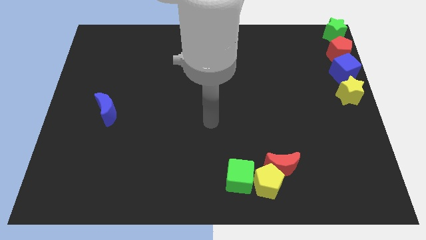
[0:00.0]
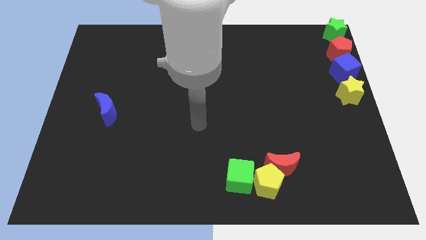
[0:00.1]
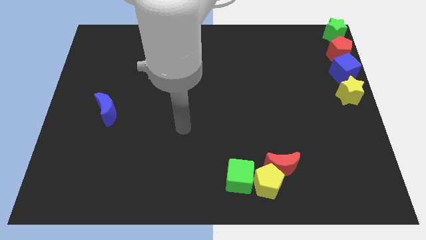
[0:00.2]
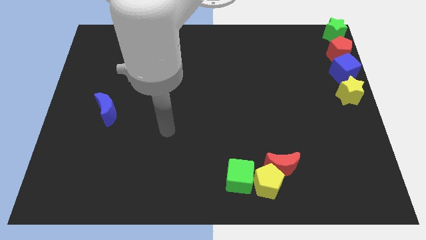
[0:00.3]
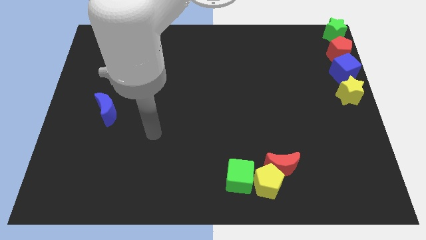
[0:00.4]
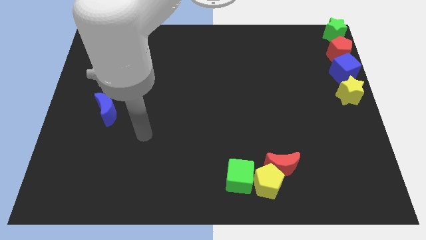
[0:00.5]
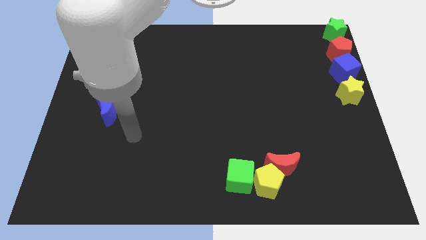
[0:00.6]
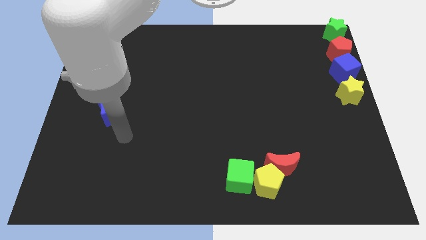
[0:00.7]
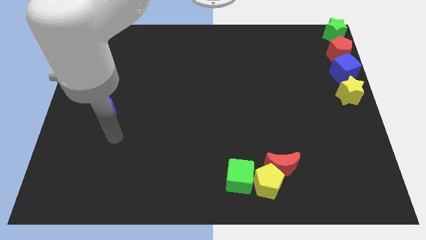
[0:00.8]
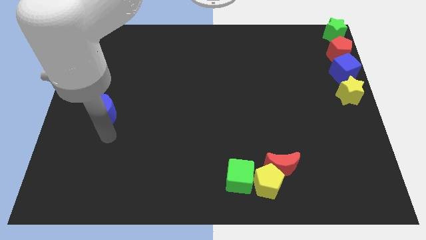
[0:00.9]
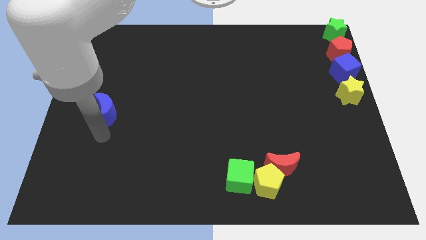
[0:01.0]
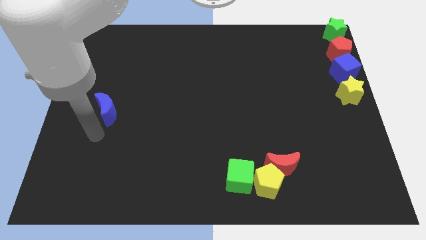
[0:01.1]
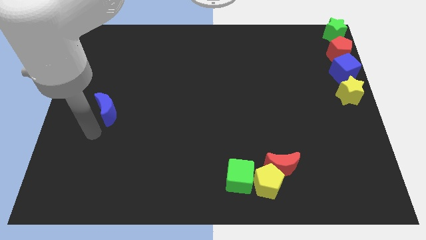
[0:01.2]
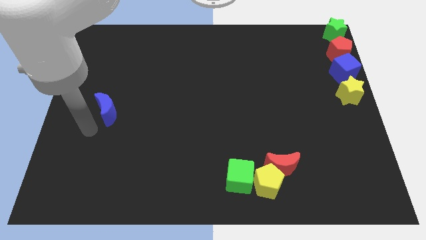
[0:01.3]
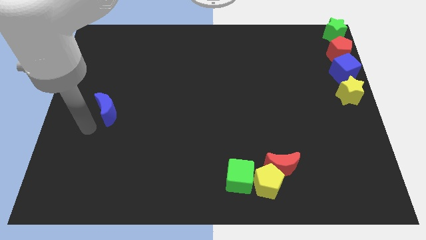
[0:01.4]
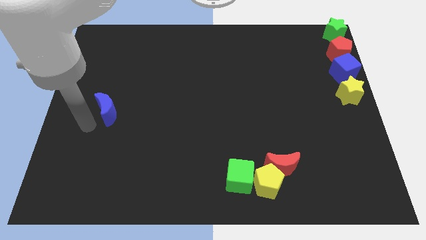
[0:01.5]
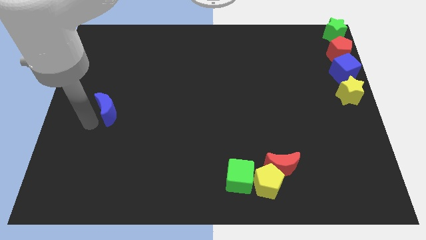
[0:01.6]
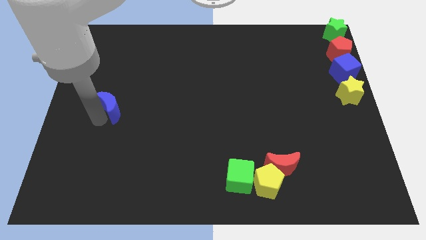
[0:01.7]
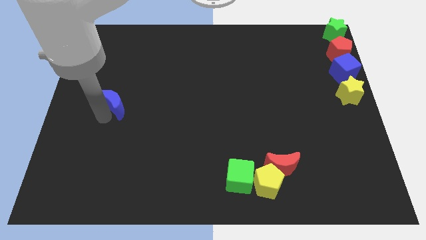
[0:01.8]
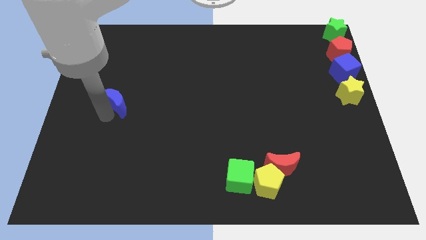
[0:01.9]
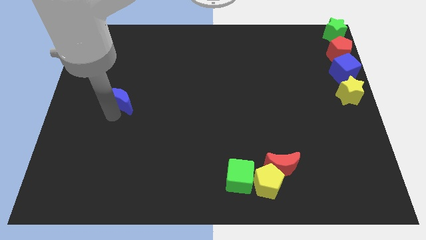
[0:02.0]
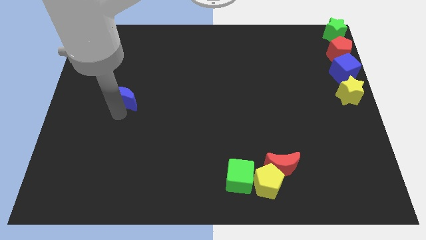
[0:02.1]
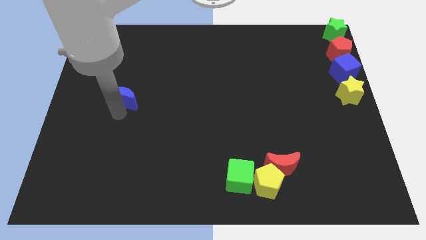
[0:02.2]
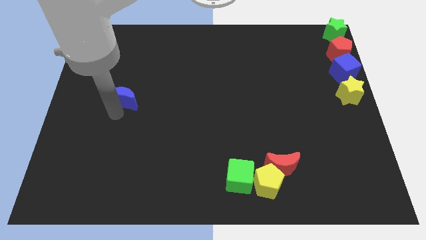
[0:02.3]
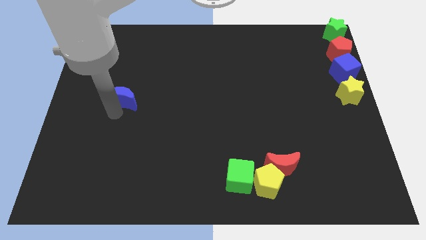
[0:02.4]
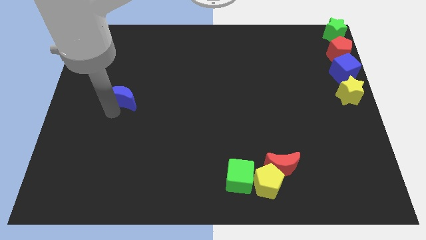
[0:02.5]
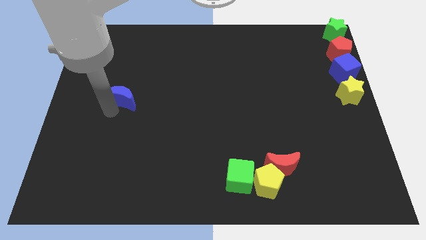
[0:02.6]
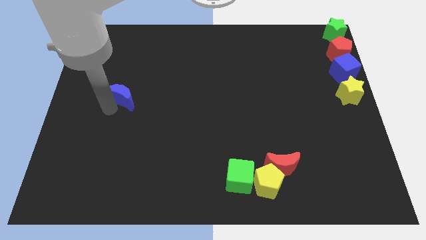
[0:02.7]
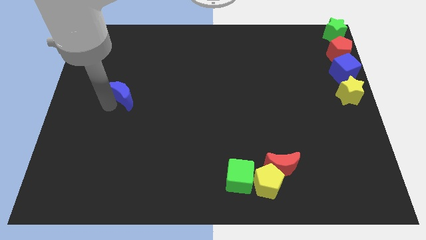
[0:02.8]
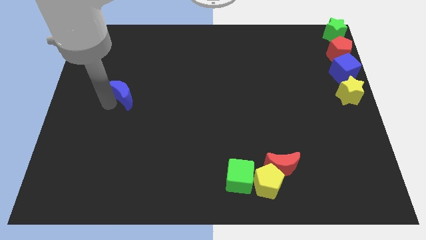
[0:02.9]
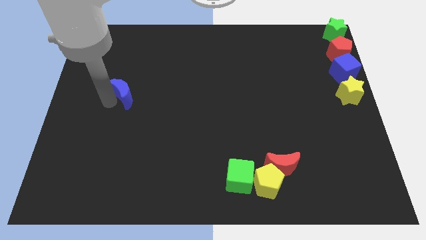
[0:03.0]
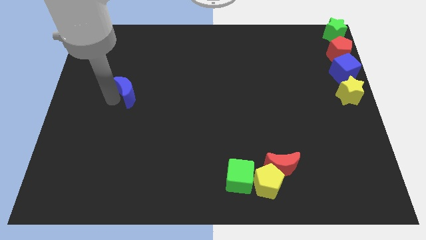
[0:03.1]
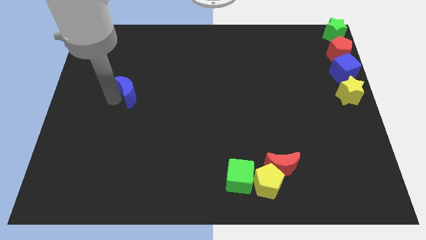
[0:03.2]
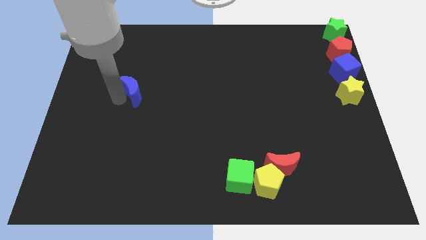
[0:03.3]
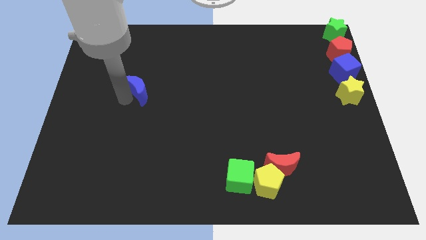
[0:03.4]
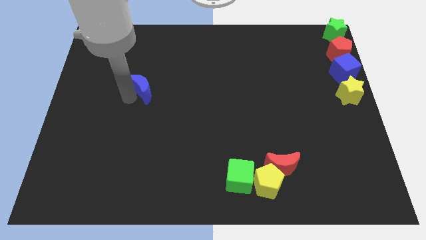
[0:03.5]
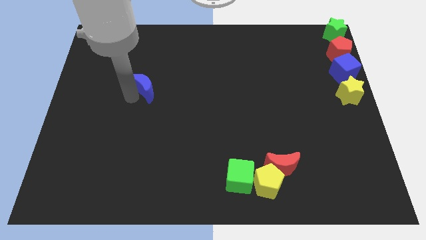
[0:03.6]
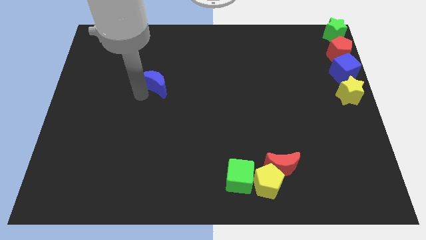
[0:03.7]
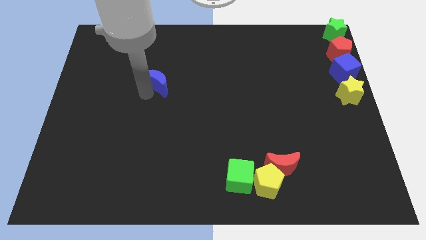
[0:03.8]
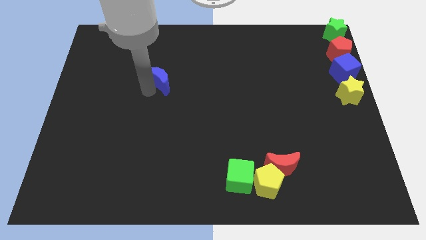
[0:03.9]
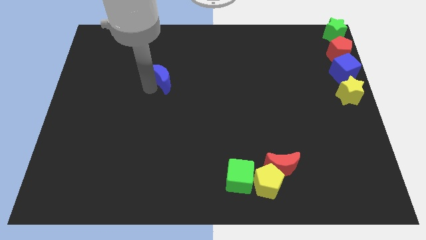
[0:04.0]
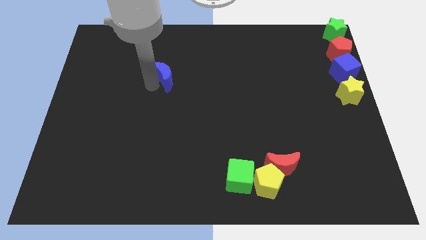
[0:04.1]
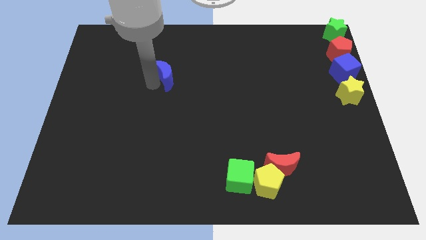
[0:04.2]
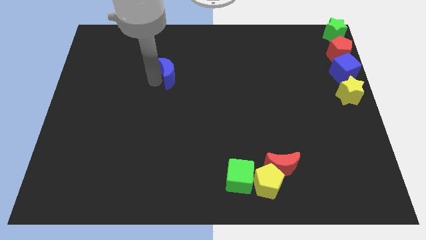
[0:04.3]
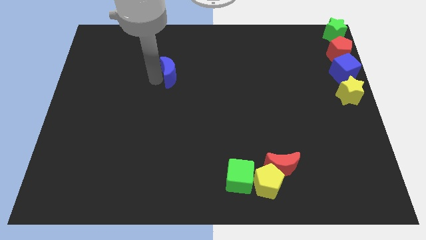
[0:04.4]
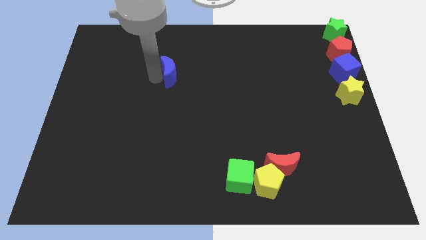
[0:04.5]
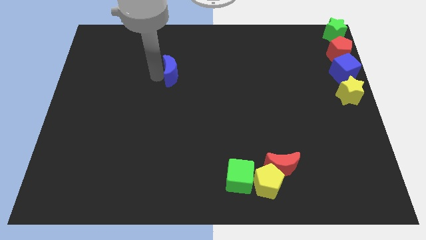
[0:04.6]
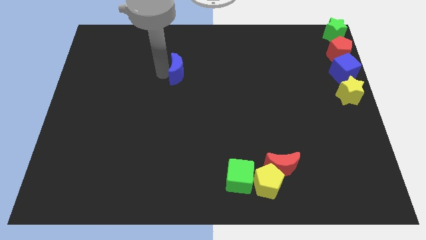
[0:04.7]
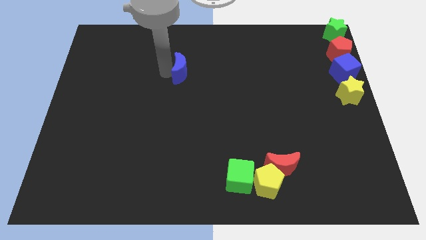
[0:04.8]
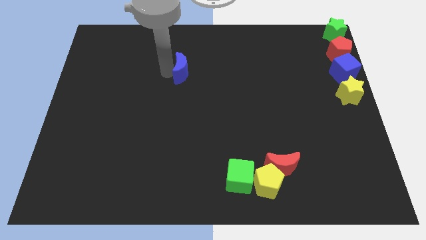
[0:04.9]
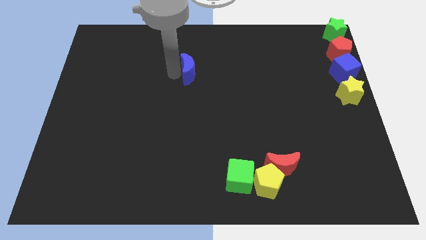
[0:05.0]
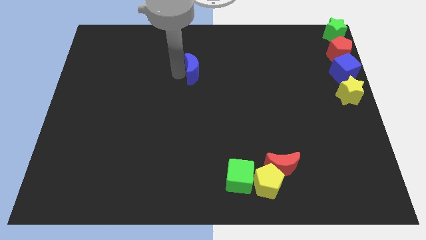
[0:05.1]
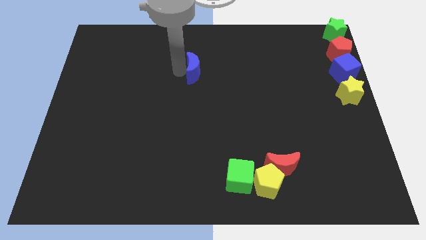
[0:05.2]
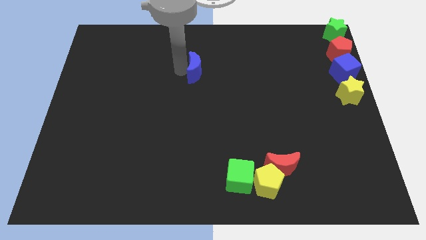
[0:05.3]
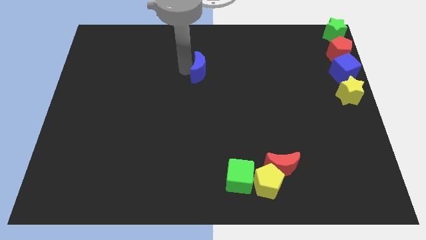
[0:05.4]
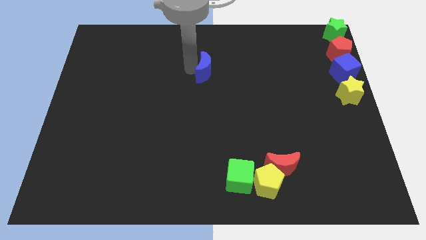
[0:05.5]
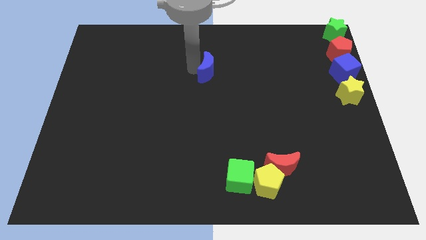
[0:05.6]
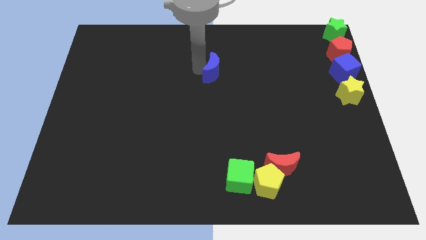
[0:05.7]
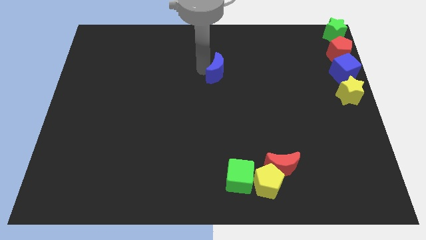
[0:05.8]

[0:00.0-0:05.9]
push the blue crescent towards the top center of the board

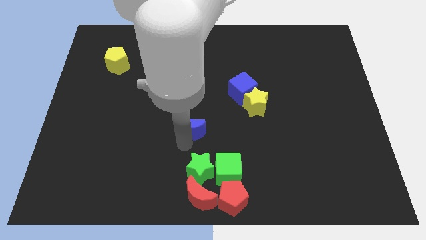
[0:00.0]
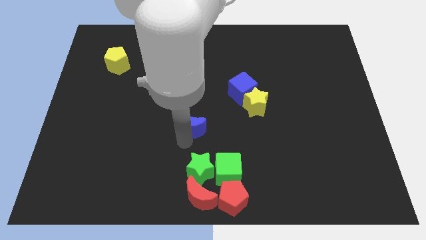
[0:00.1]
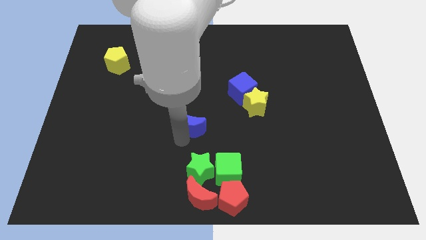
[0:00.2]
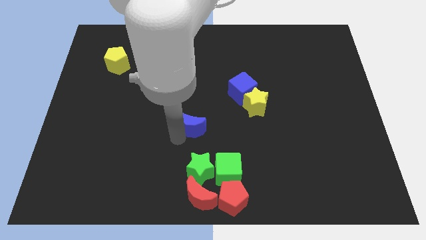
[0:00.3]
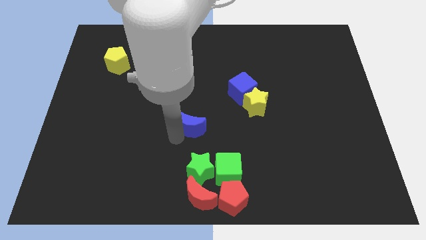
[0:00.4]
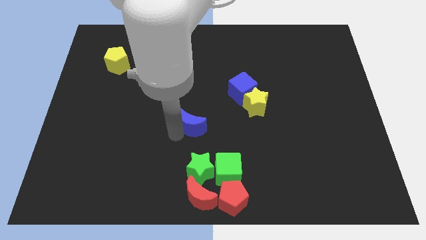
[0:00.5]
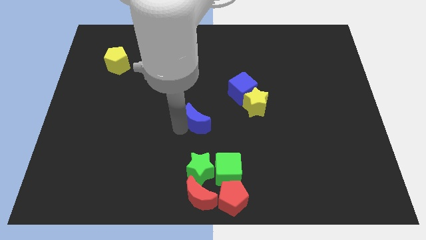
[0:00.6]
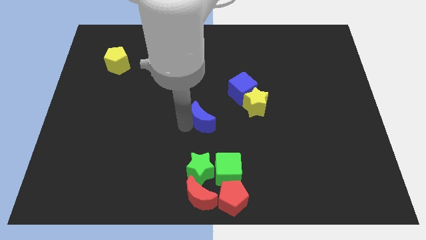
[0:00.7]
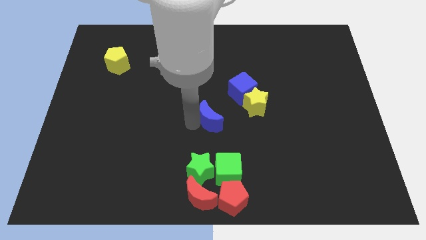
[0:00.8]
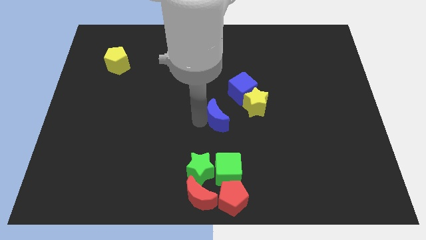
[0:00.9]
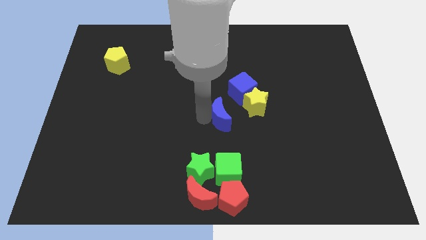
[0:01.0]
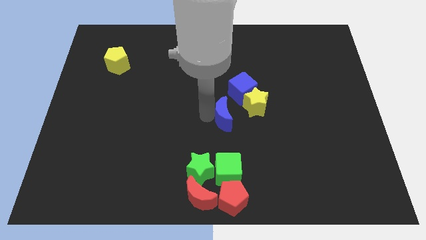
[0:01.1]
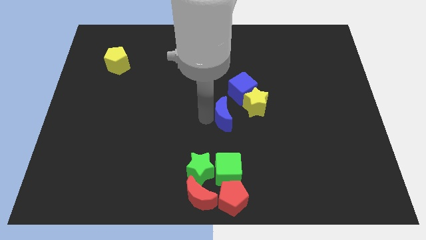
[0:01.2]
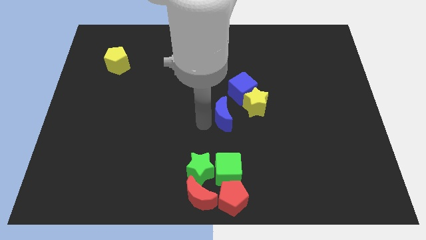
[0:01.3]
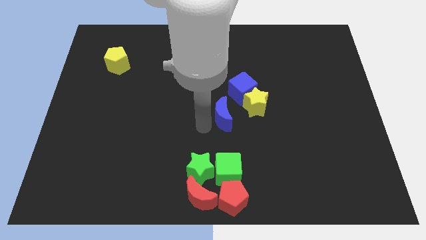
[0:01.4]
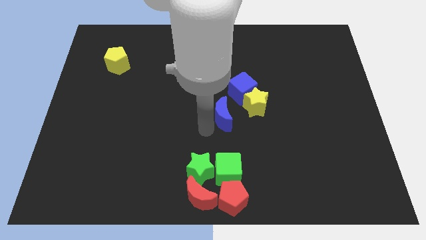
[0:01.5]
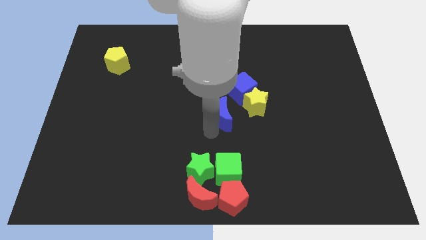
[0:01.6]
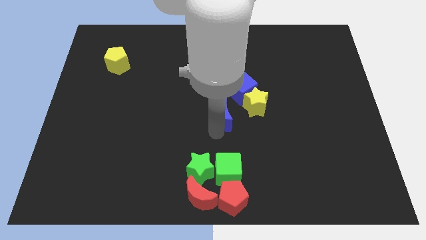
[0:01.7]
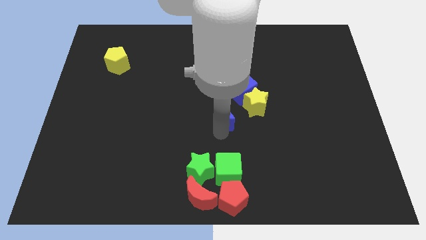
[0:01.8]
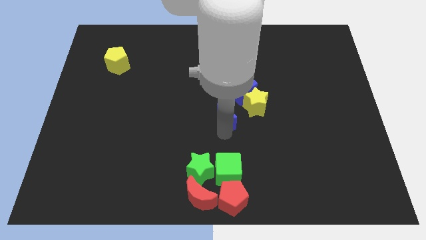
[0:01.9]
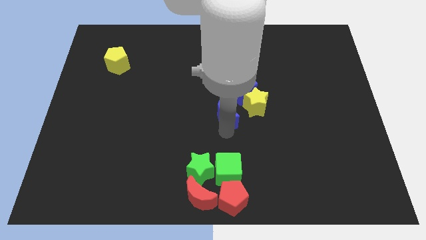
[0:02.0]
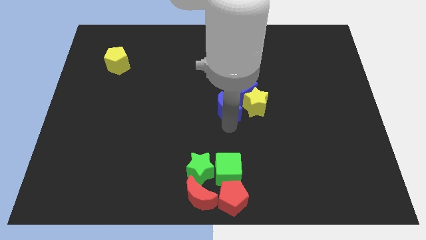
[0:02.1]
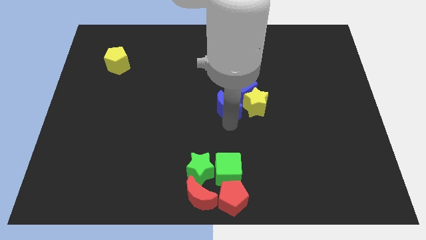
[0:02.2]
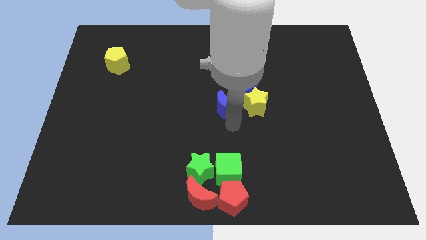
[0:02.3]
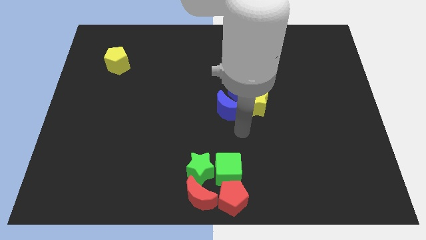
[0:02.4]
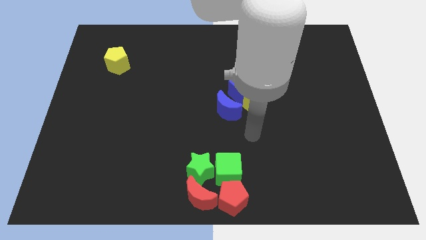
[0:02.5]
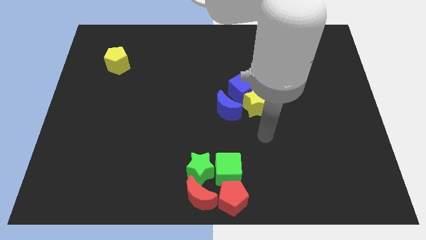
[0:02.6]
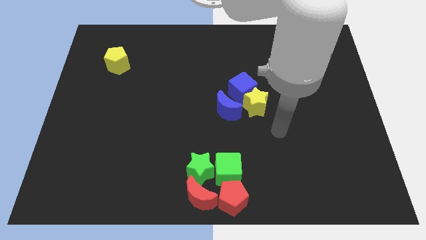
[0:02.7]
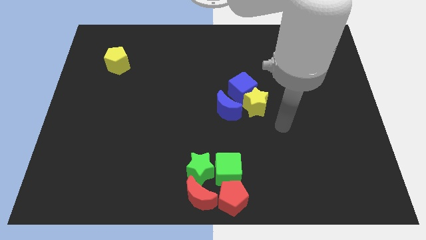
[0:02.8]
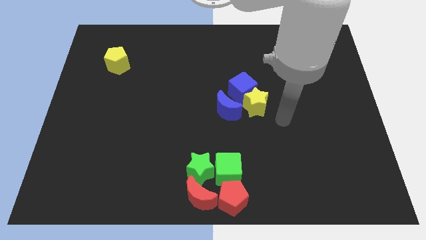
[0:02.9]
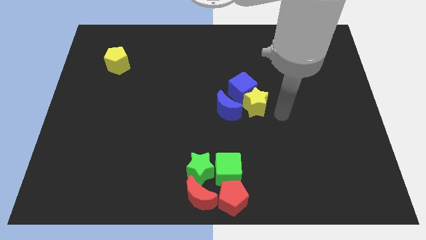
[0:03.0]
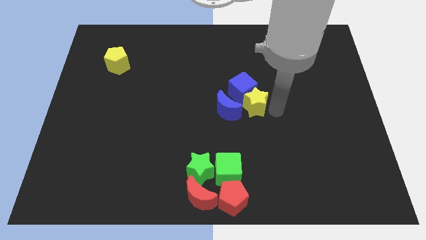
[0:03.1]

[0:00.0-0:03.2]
move the blue moon close to the blue cube
